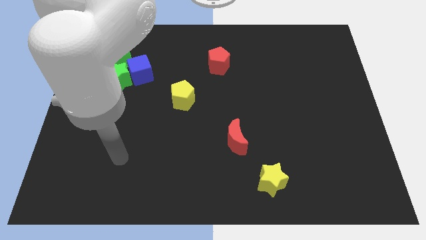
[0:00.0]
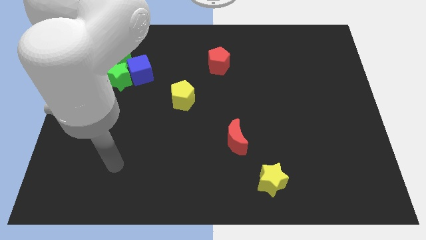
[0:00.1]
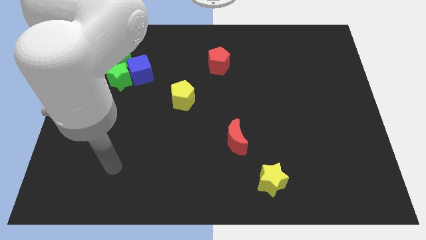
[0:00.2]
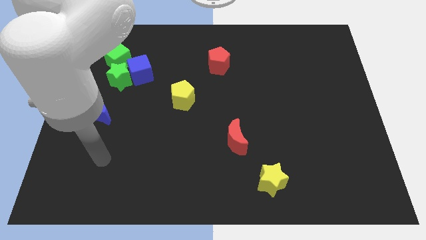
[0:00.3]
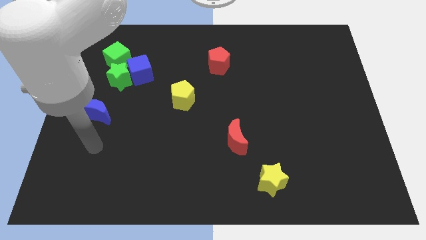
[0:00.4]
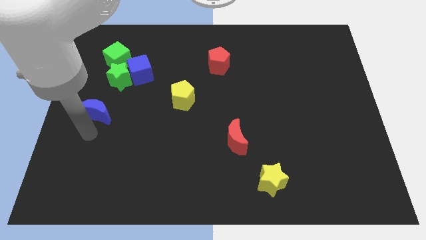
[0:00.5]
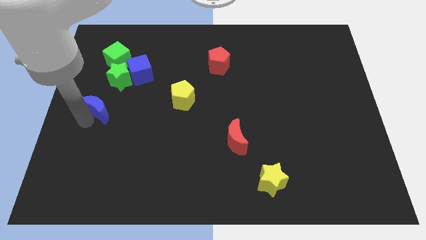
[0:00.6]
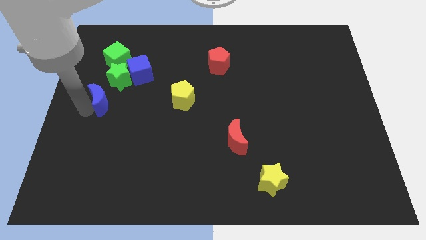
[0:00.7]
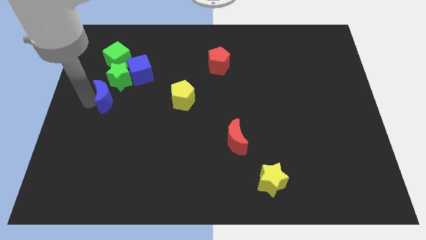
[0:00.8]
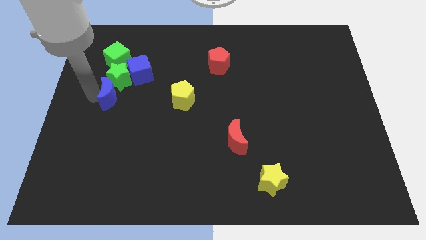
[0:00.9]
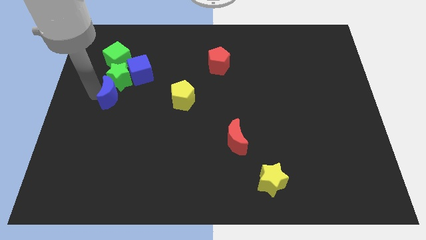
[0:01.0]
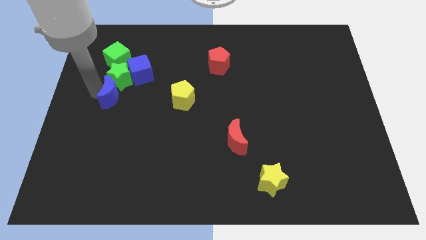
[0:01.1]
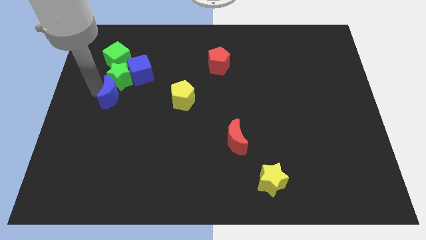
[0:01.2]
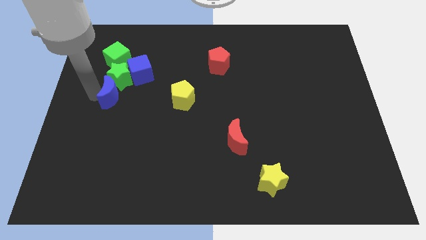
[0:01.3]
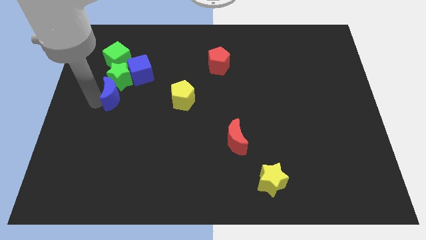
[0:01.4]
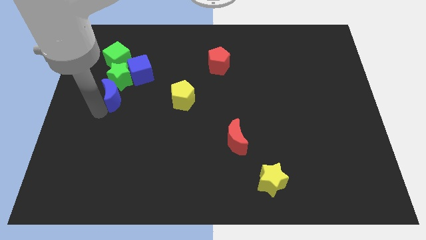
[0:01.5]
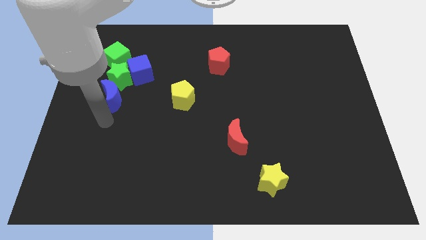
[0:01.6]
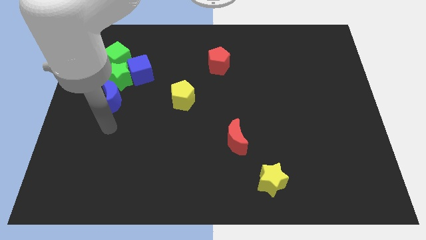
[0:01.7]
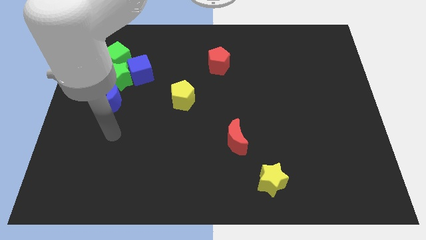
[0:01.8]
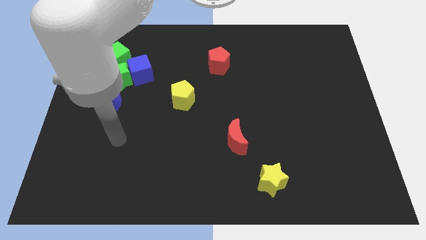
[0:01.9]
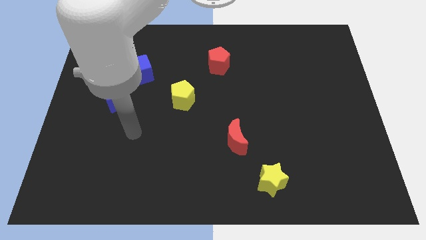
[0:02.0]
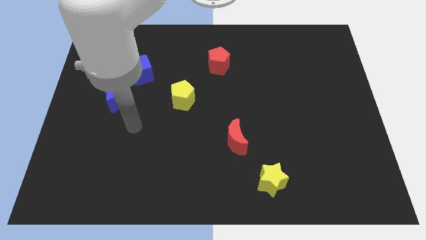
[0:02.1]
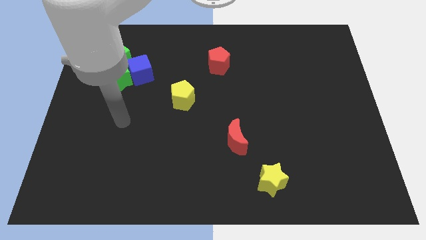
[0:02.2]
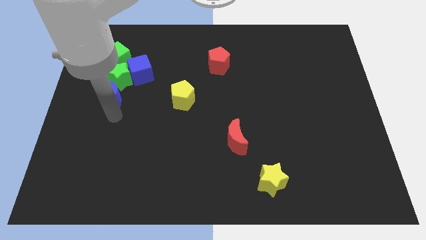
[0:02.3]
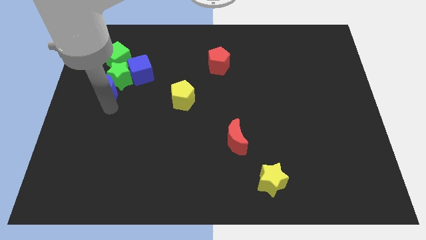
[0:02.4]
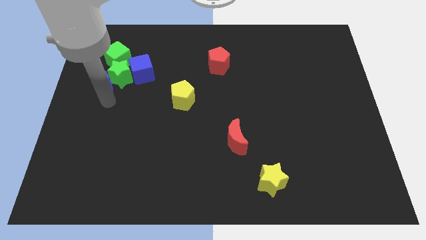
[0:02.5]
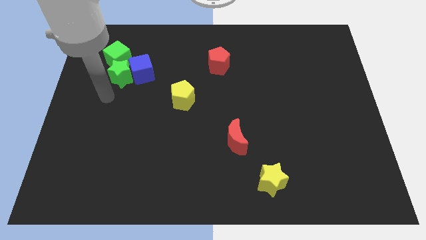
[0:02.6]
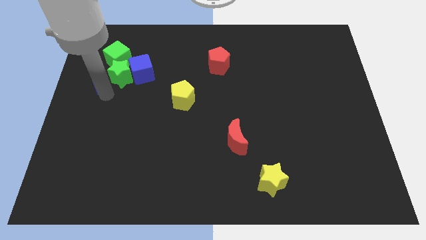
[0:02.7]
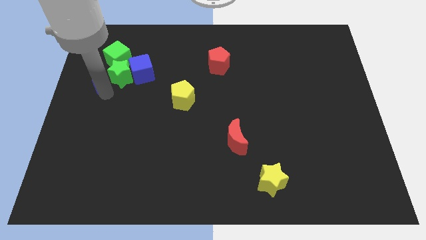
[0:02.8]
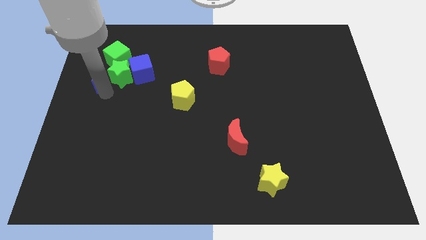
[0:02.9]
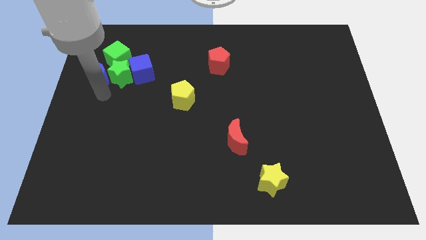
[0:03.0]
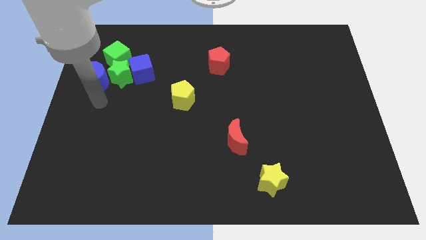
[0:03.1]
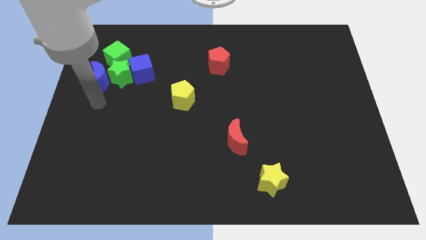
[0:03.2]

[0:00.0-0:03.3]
push the blue moon to the left side of the green star

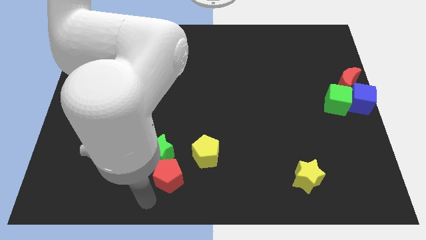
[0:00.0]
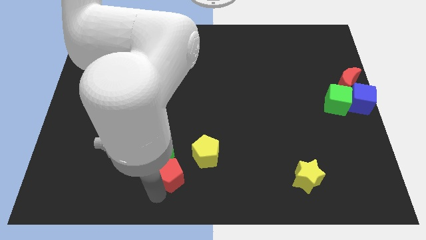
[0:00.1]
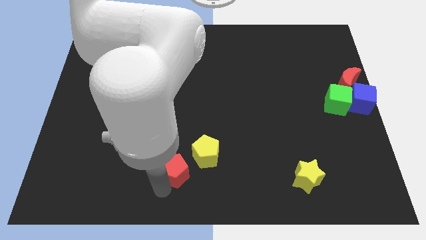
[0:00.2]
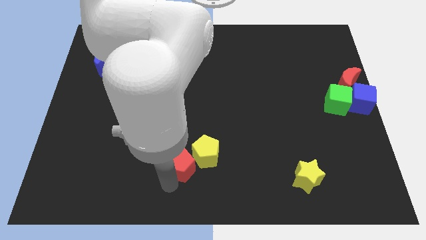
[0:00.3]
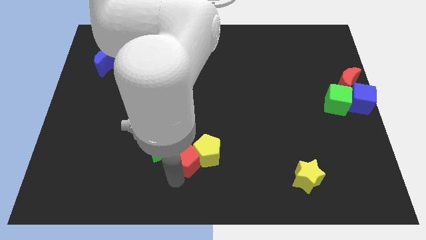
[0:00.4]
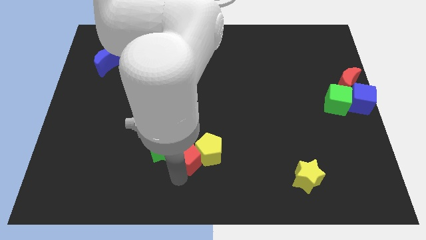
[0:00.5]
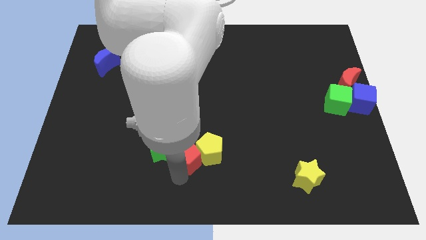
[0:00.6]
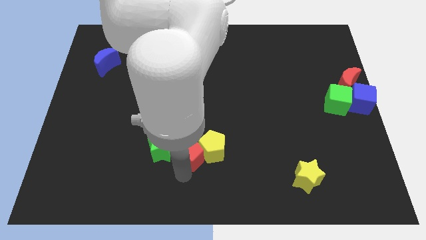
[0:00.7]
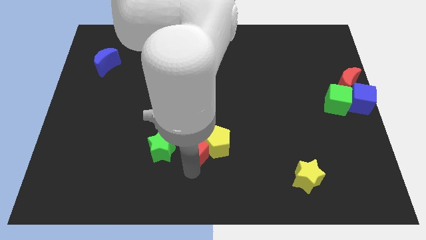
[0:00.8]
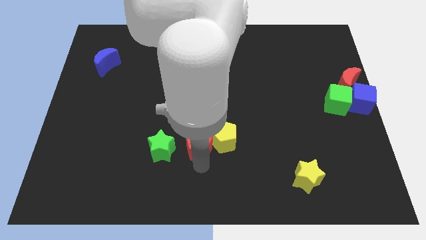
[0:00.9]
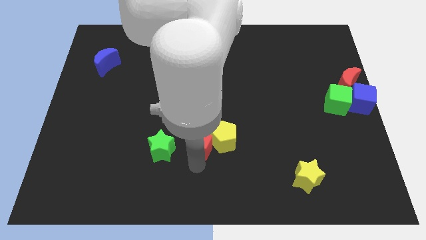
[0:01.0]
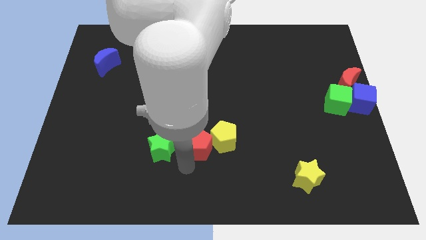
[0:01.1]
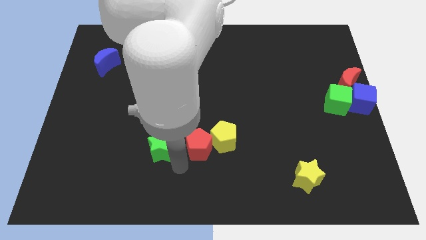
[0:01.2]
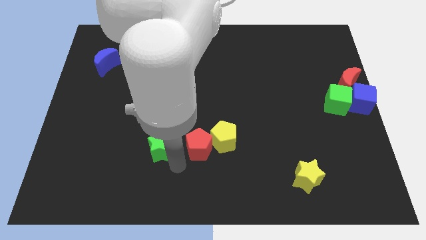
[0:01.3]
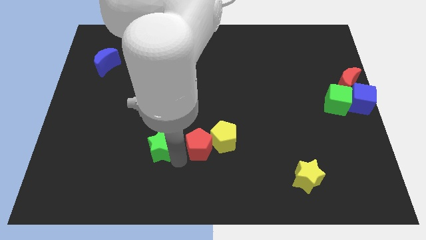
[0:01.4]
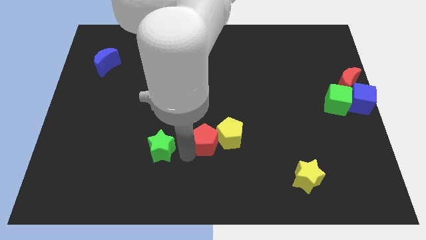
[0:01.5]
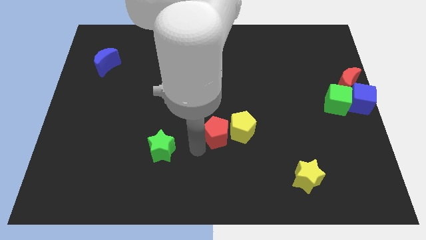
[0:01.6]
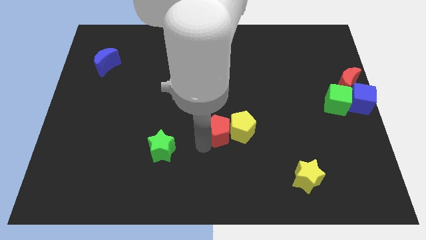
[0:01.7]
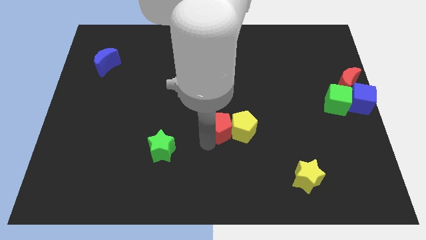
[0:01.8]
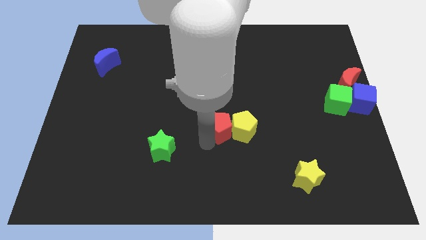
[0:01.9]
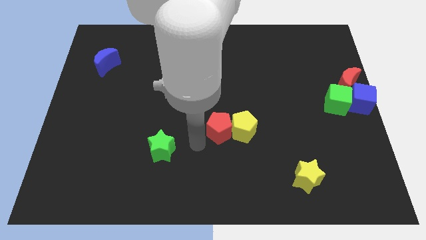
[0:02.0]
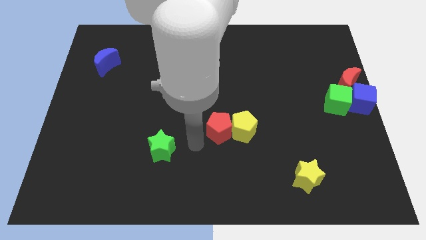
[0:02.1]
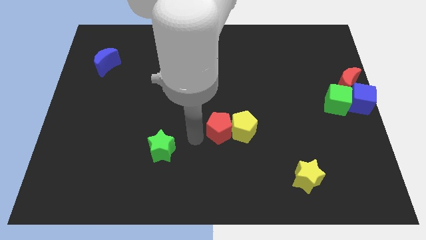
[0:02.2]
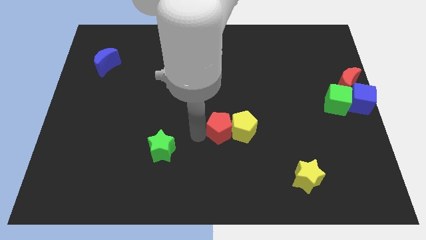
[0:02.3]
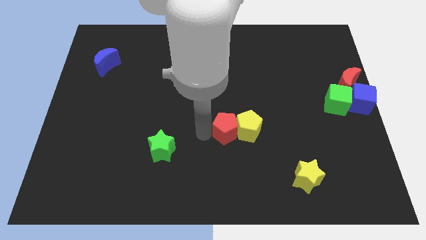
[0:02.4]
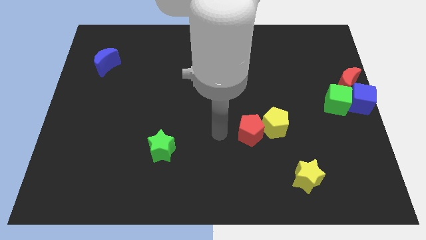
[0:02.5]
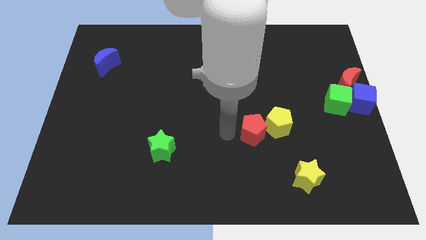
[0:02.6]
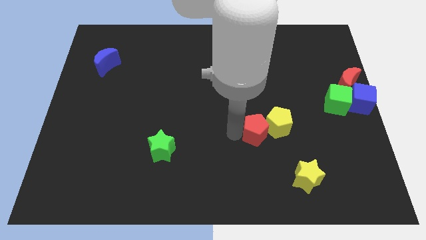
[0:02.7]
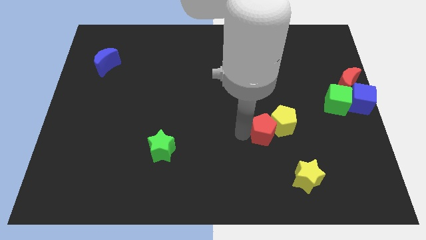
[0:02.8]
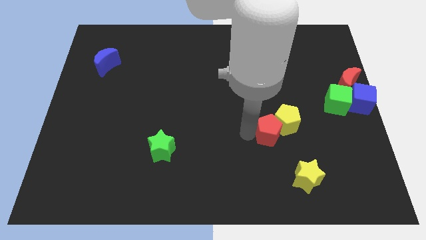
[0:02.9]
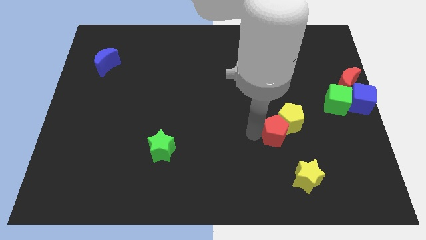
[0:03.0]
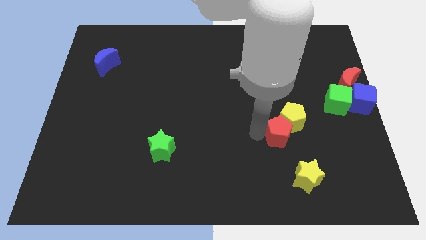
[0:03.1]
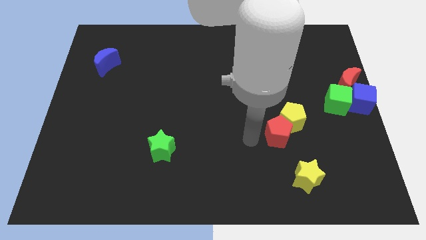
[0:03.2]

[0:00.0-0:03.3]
separate red and yellow pentagons from green star

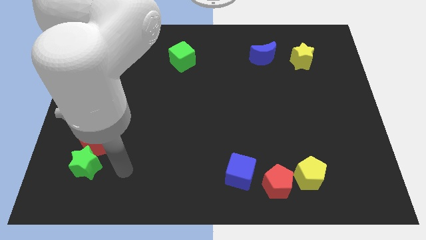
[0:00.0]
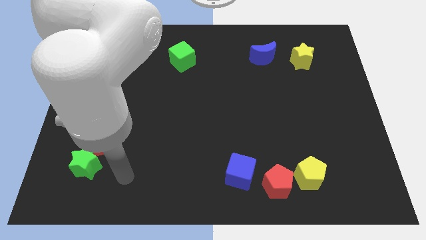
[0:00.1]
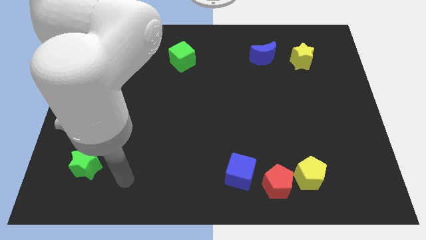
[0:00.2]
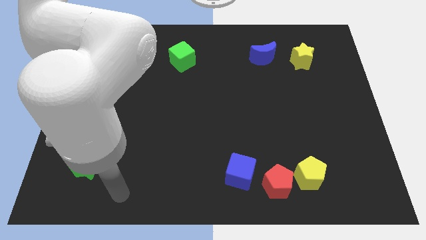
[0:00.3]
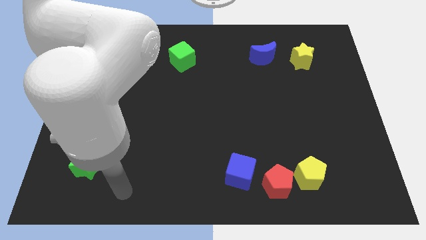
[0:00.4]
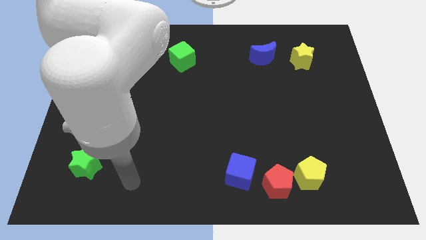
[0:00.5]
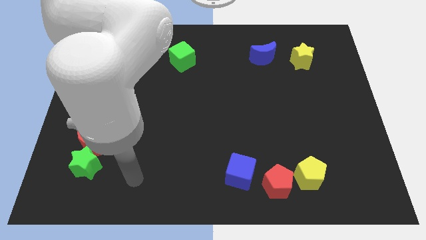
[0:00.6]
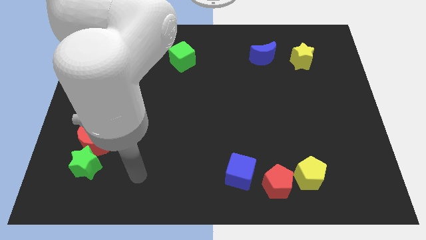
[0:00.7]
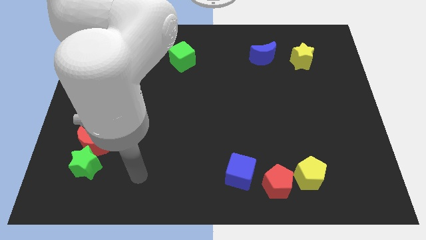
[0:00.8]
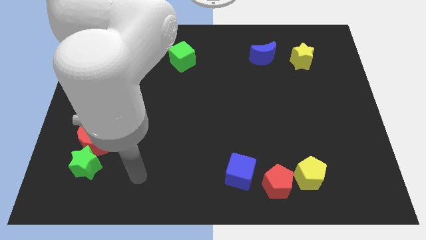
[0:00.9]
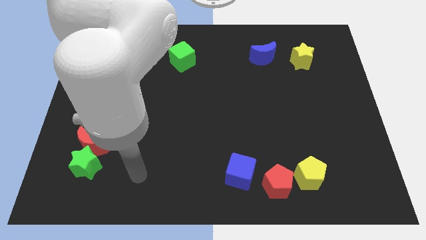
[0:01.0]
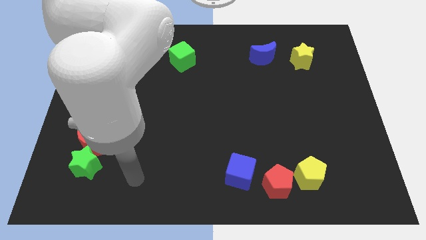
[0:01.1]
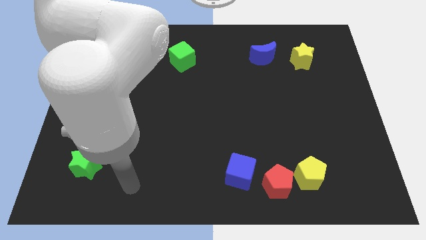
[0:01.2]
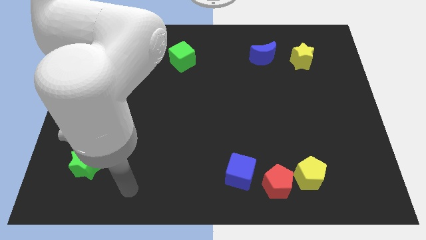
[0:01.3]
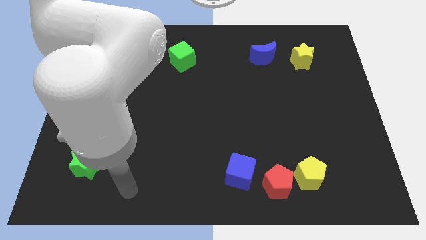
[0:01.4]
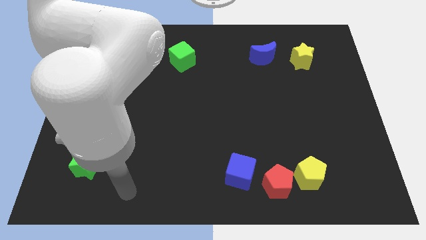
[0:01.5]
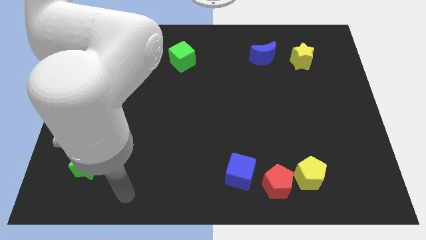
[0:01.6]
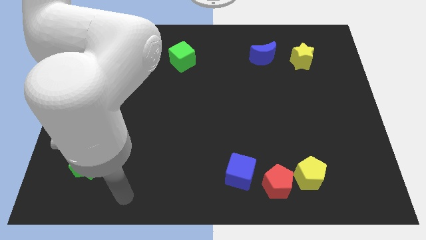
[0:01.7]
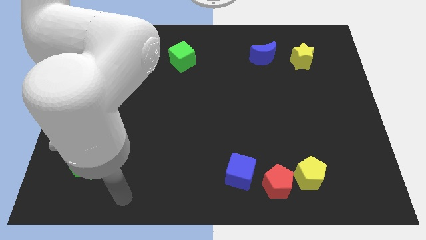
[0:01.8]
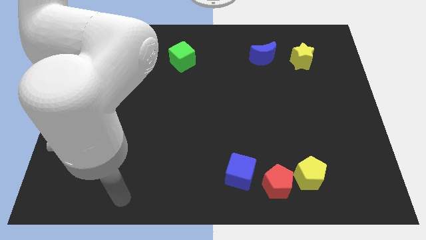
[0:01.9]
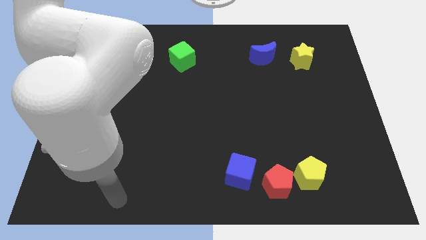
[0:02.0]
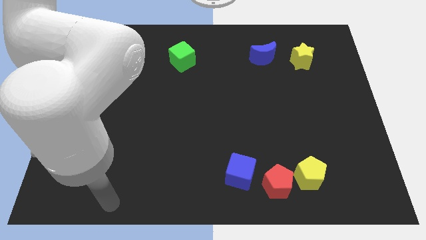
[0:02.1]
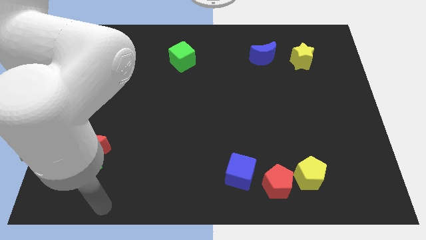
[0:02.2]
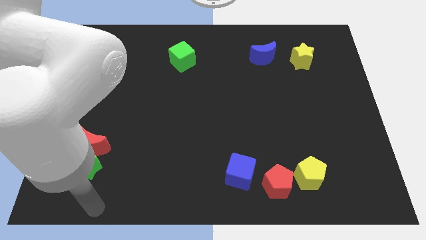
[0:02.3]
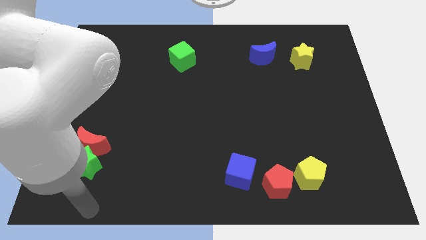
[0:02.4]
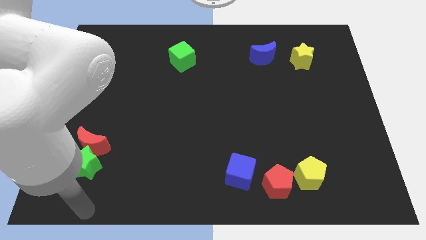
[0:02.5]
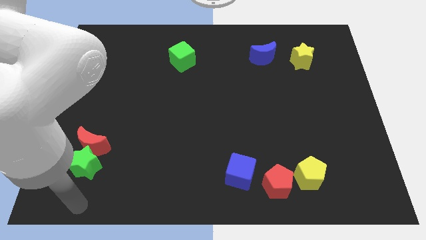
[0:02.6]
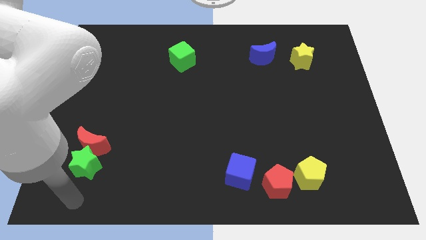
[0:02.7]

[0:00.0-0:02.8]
place your arm at the bottom side of the green star
